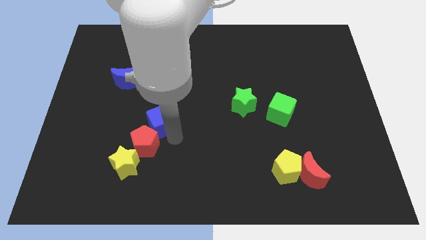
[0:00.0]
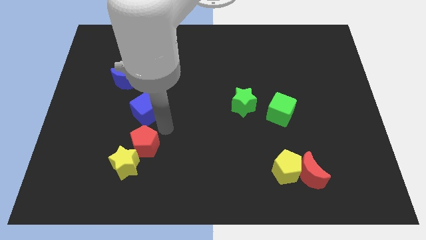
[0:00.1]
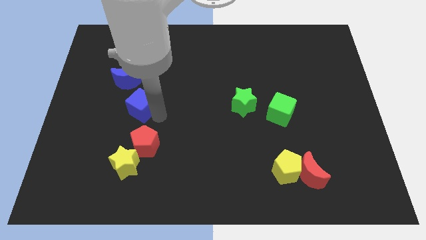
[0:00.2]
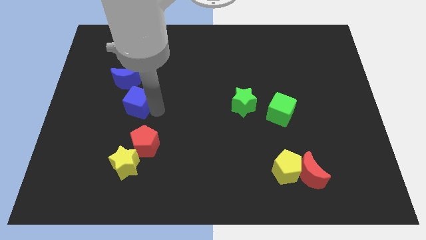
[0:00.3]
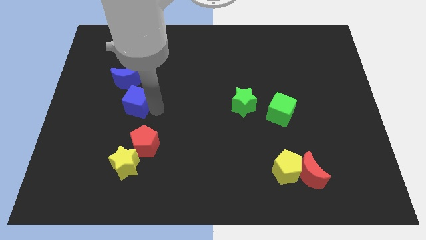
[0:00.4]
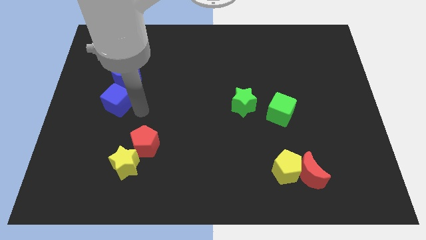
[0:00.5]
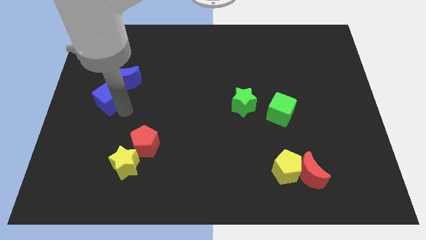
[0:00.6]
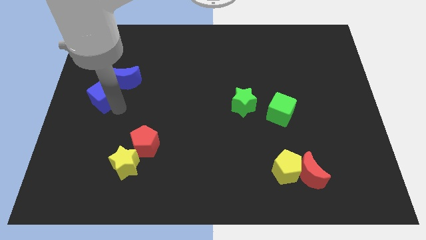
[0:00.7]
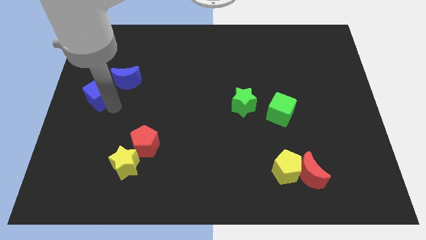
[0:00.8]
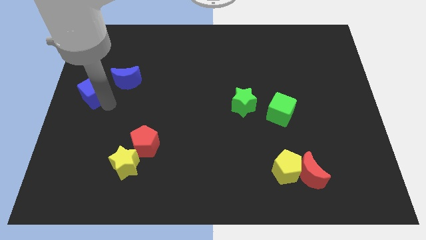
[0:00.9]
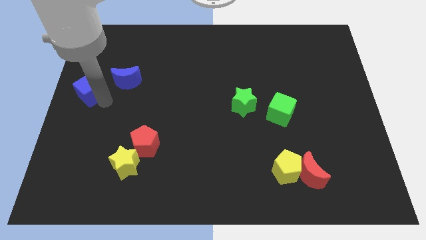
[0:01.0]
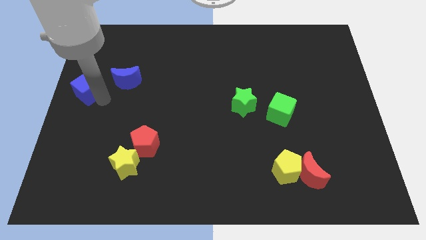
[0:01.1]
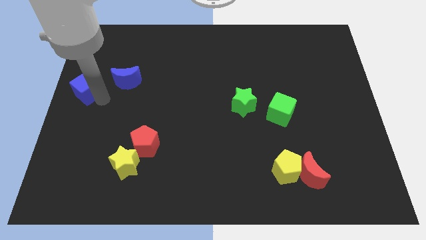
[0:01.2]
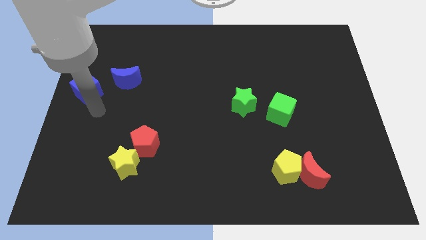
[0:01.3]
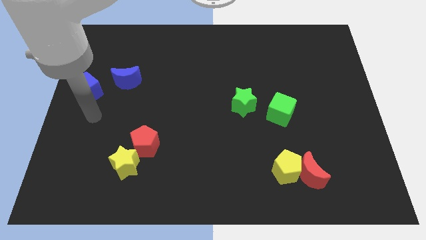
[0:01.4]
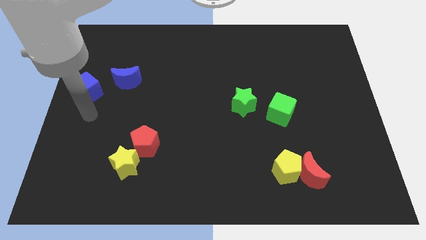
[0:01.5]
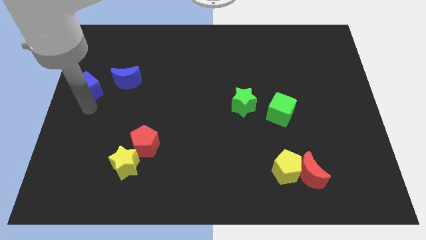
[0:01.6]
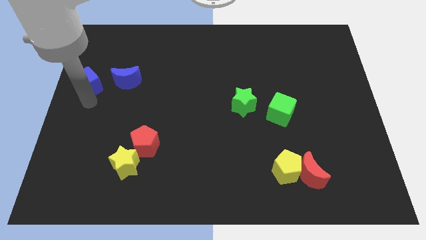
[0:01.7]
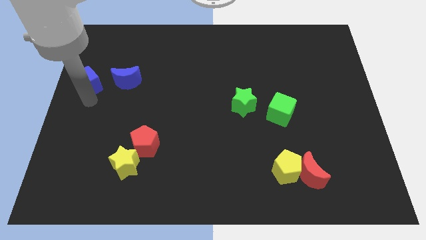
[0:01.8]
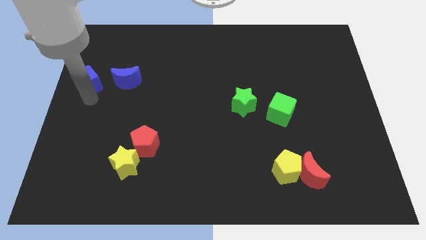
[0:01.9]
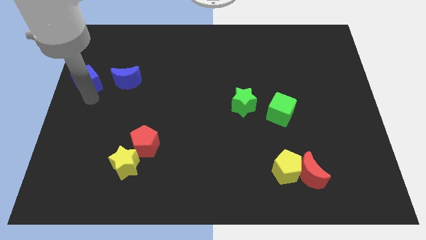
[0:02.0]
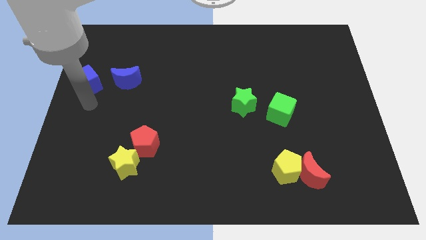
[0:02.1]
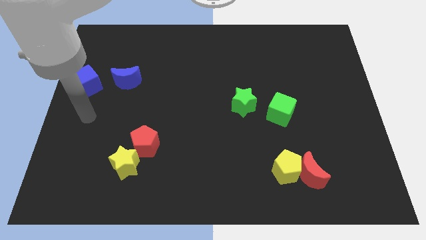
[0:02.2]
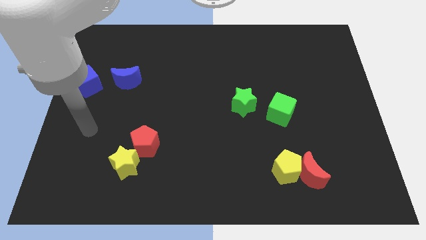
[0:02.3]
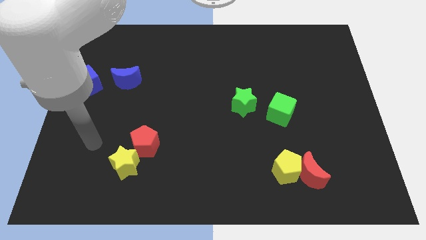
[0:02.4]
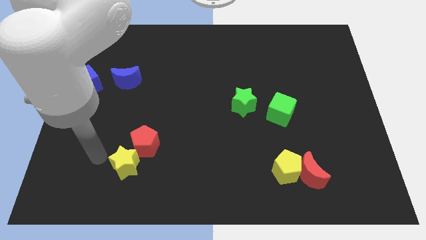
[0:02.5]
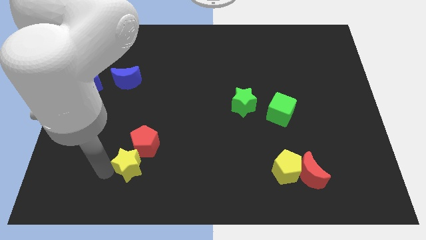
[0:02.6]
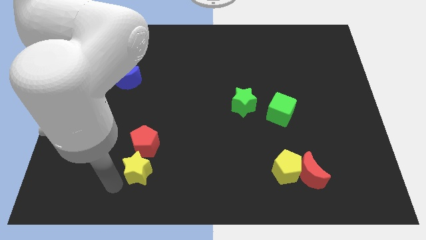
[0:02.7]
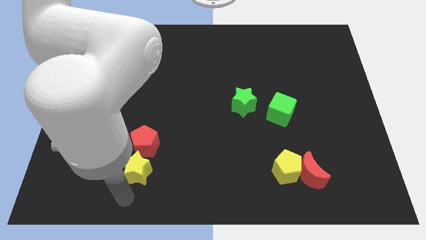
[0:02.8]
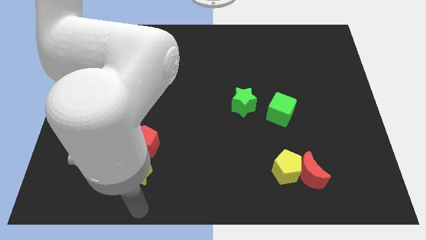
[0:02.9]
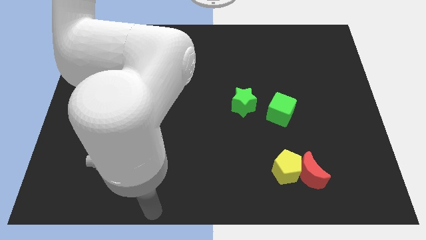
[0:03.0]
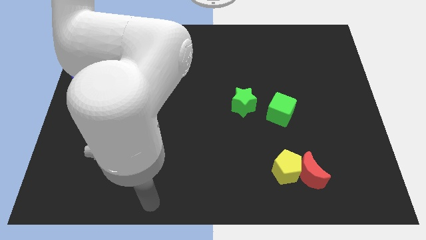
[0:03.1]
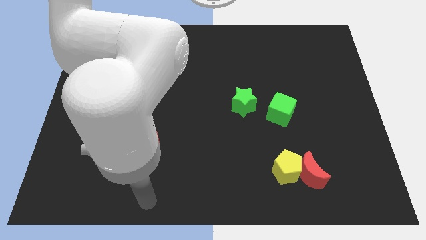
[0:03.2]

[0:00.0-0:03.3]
move the blue cube to the left side of the blue crescent

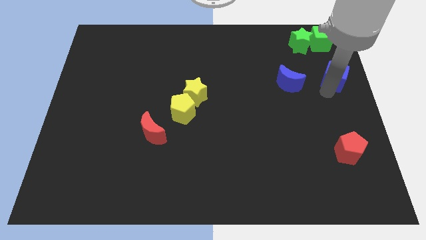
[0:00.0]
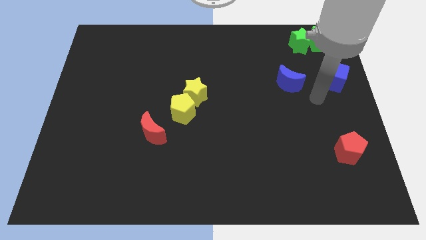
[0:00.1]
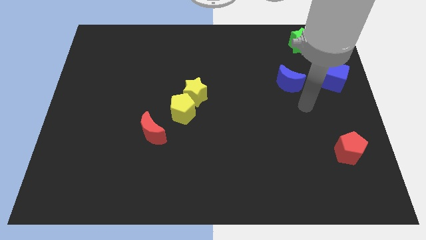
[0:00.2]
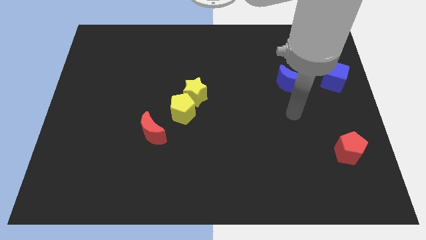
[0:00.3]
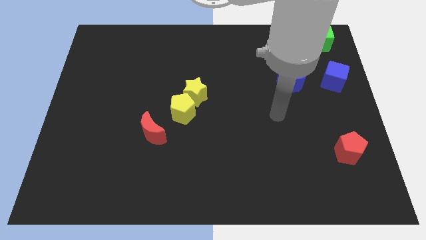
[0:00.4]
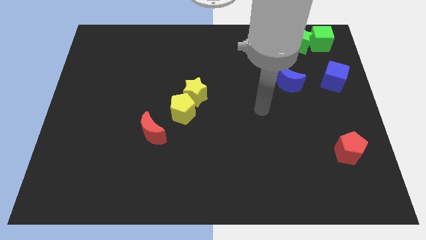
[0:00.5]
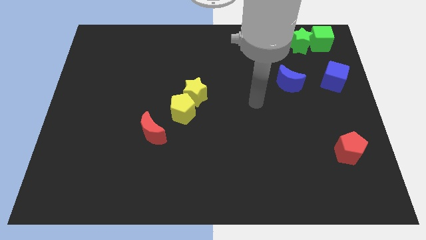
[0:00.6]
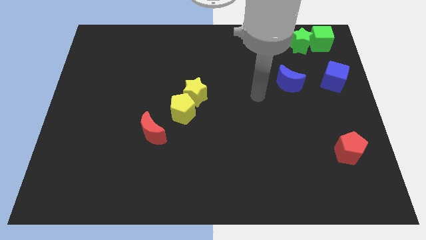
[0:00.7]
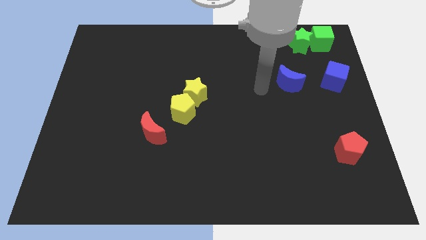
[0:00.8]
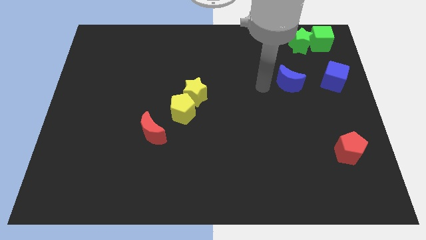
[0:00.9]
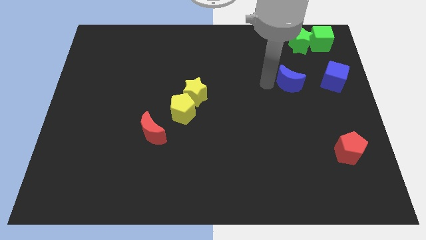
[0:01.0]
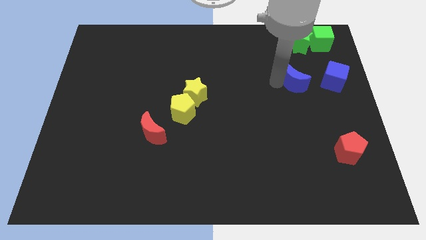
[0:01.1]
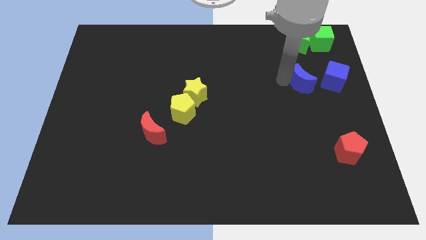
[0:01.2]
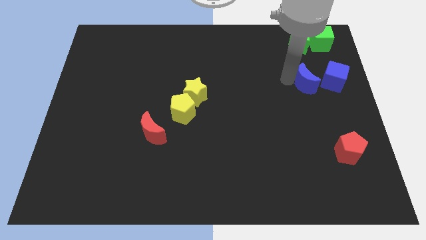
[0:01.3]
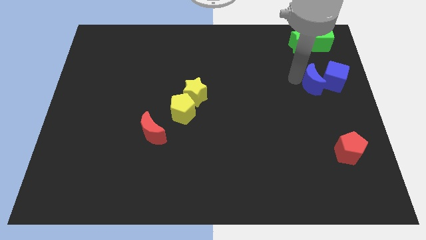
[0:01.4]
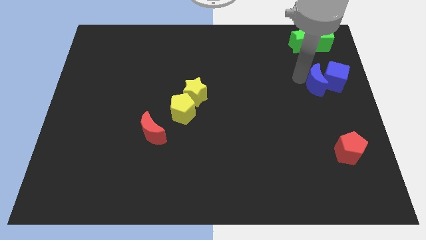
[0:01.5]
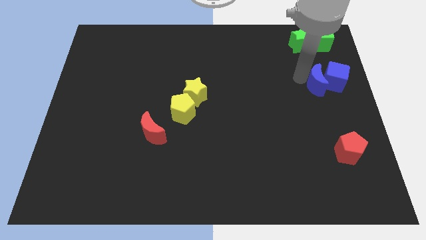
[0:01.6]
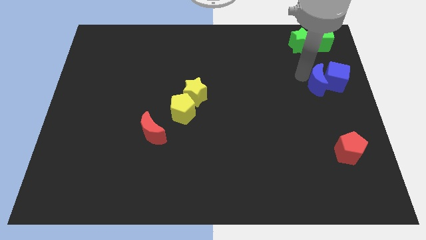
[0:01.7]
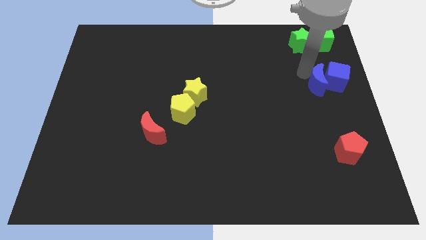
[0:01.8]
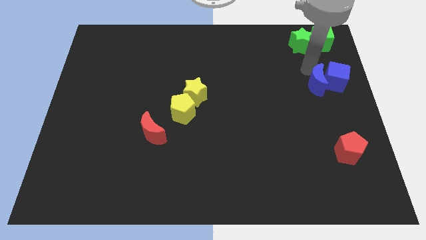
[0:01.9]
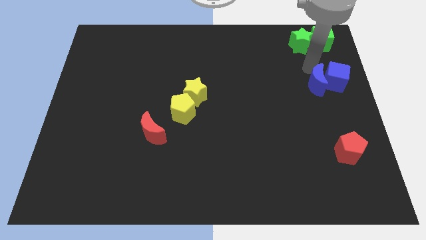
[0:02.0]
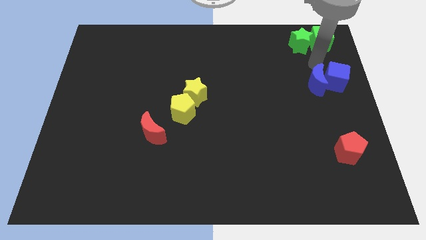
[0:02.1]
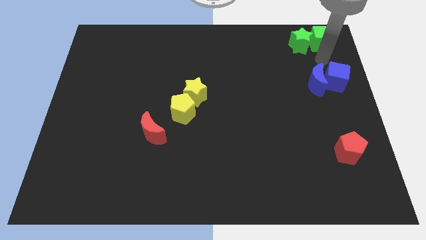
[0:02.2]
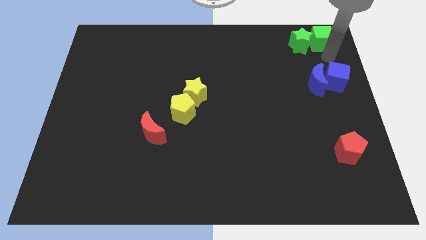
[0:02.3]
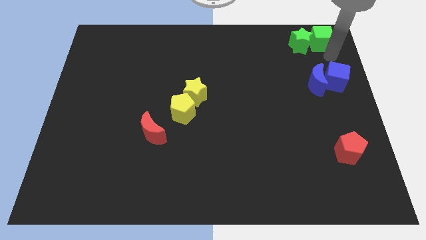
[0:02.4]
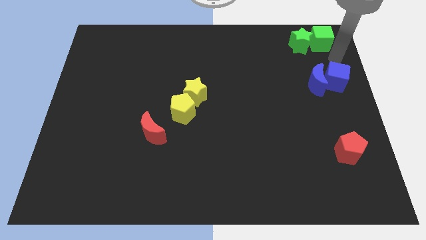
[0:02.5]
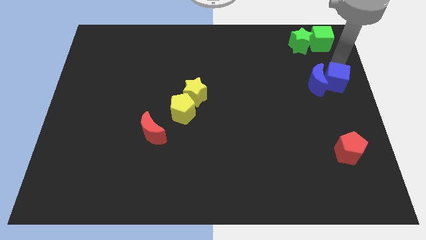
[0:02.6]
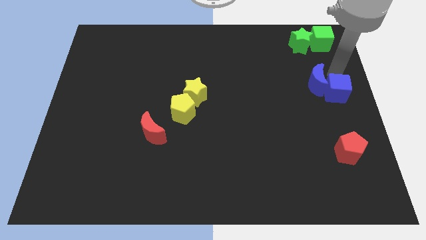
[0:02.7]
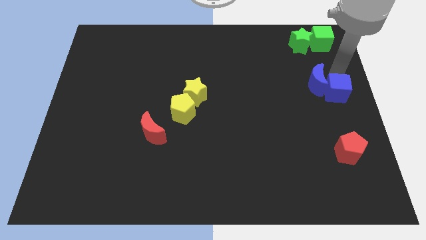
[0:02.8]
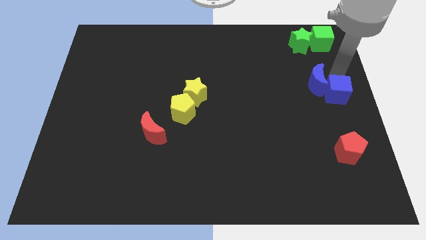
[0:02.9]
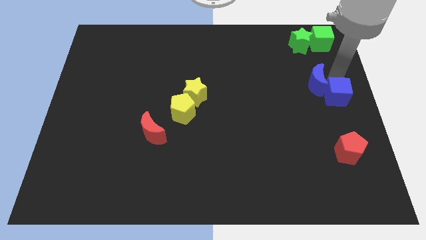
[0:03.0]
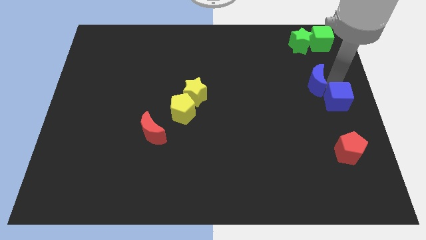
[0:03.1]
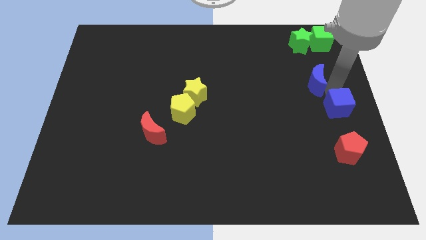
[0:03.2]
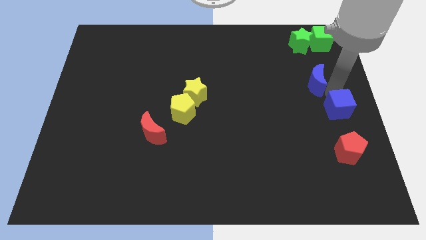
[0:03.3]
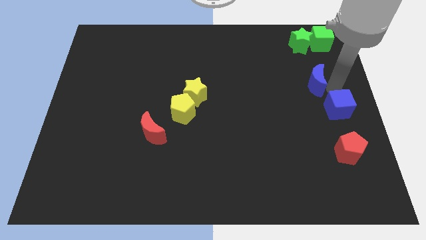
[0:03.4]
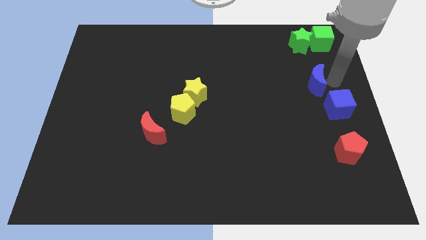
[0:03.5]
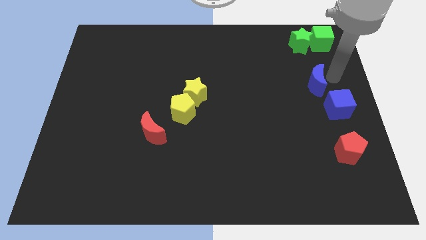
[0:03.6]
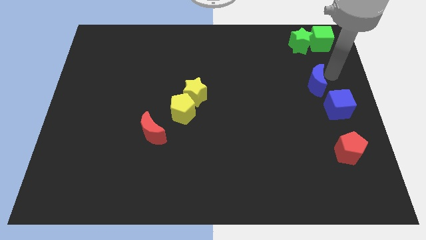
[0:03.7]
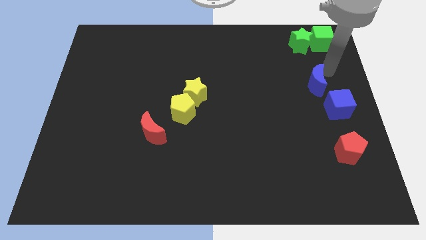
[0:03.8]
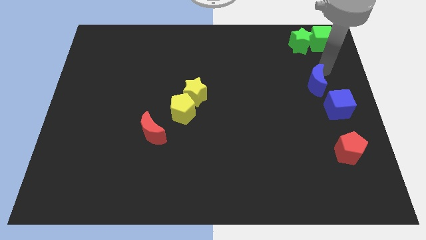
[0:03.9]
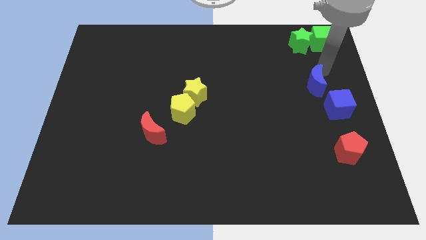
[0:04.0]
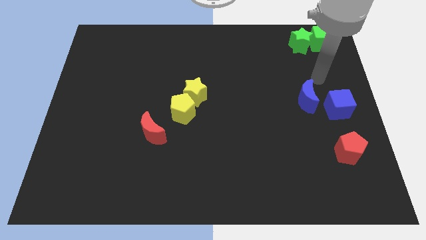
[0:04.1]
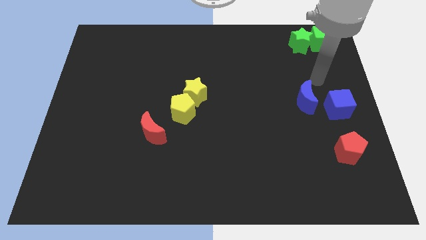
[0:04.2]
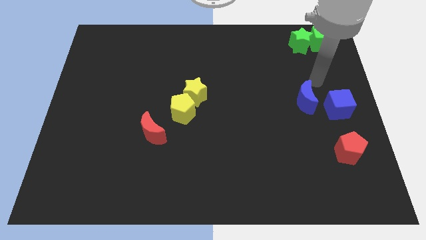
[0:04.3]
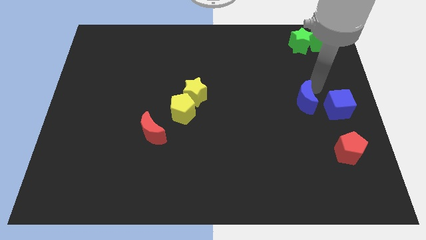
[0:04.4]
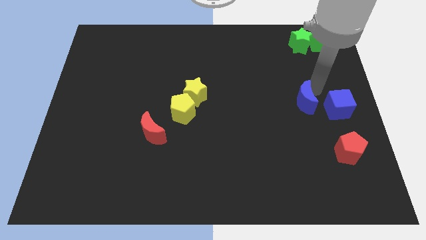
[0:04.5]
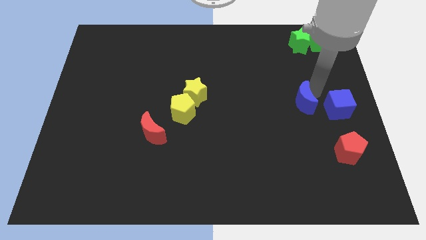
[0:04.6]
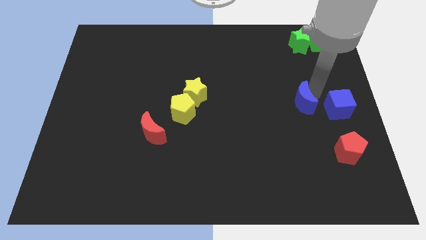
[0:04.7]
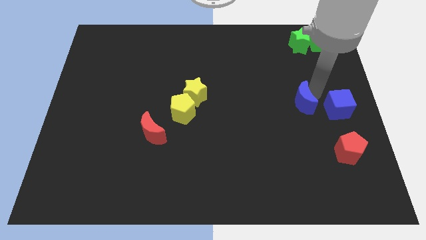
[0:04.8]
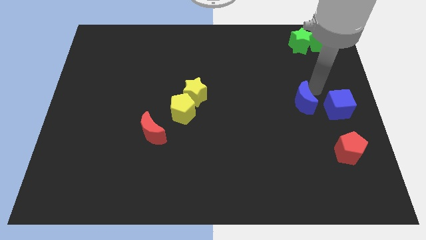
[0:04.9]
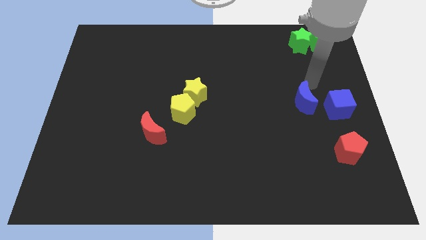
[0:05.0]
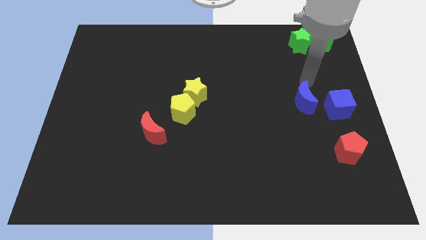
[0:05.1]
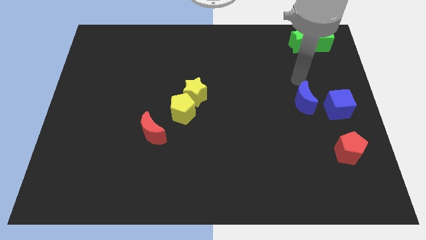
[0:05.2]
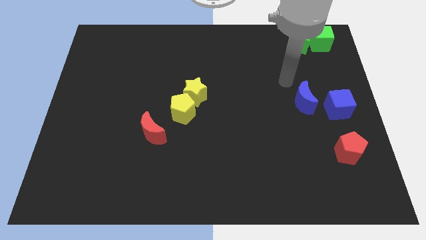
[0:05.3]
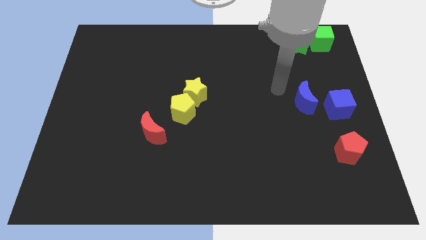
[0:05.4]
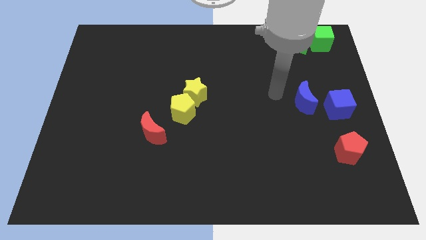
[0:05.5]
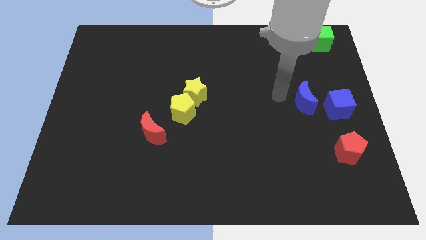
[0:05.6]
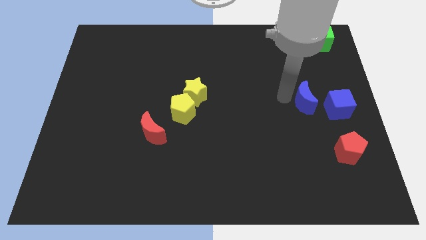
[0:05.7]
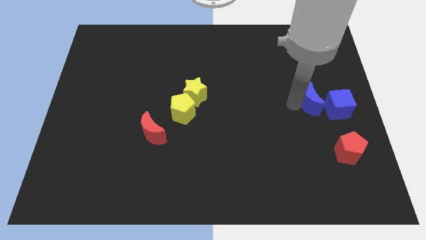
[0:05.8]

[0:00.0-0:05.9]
move blue blocks to the right center of the board
